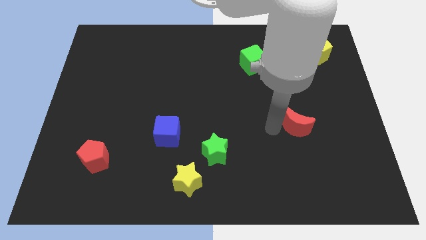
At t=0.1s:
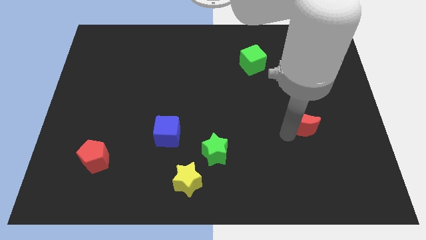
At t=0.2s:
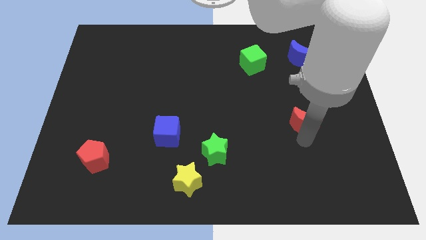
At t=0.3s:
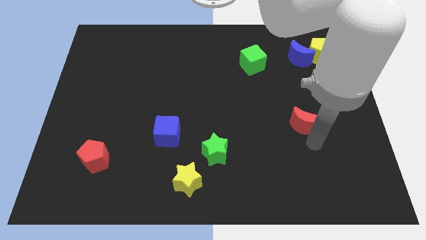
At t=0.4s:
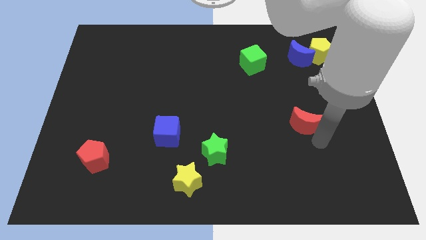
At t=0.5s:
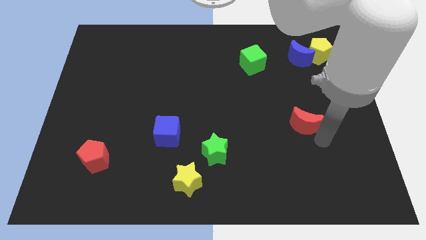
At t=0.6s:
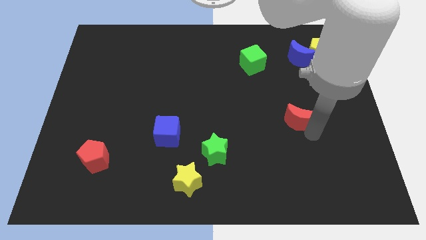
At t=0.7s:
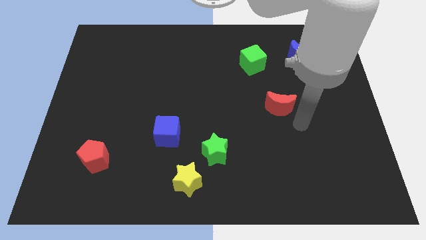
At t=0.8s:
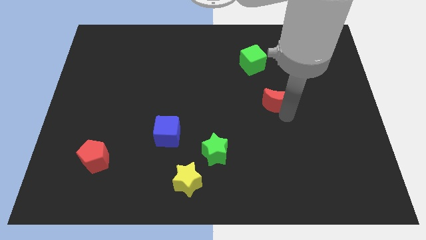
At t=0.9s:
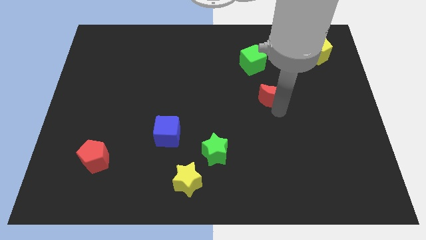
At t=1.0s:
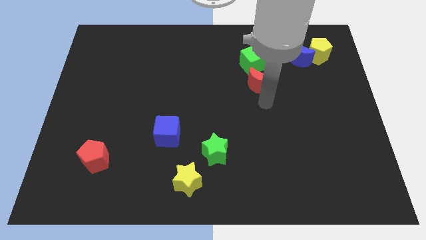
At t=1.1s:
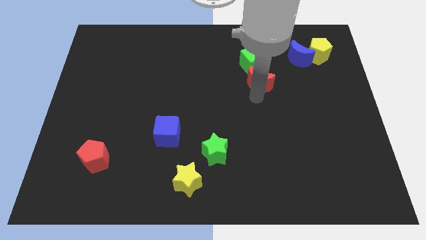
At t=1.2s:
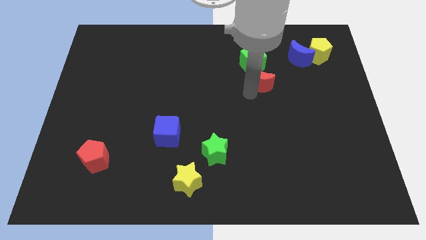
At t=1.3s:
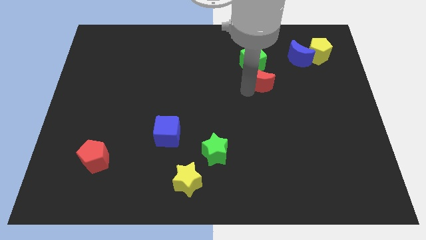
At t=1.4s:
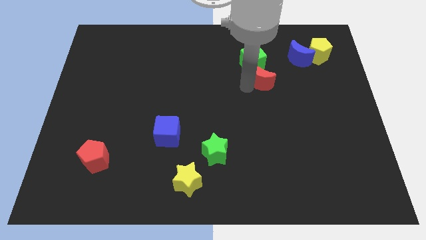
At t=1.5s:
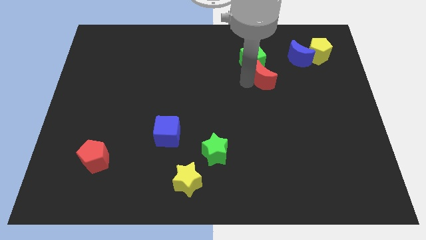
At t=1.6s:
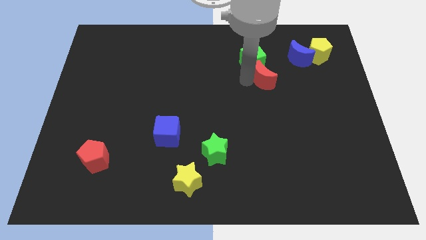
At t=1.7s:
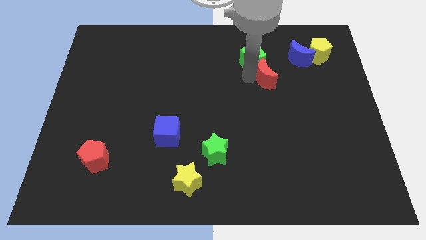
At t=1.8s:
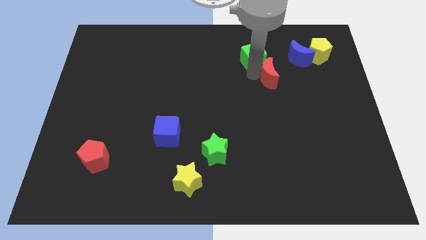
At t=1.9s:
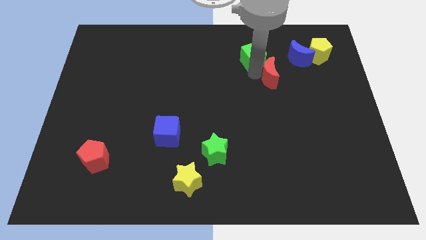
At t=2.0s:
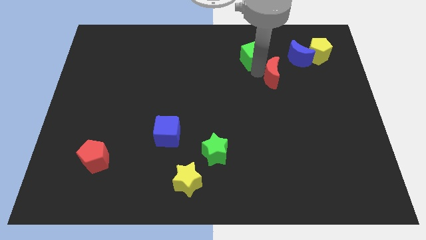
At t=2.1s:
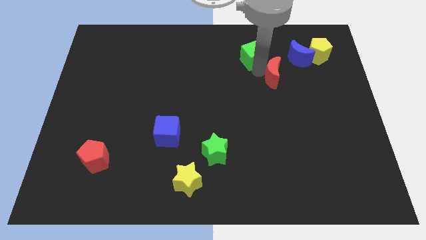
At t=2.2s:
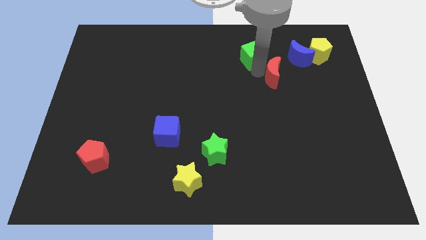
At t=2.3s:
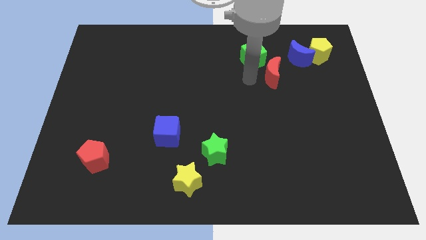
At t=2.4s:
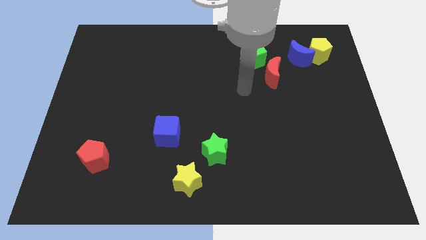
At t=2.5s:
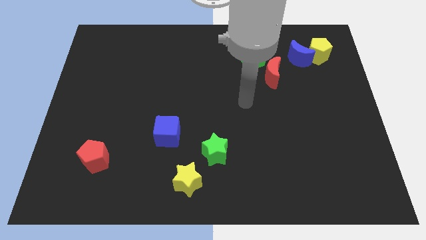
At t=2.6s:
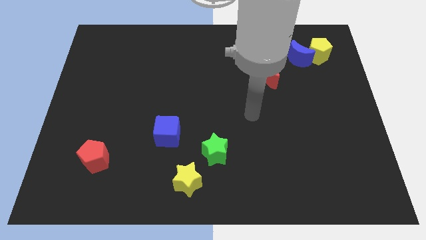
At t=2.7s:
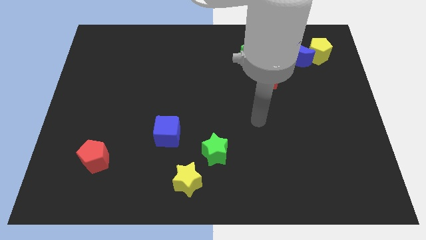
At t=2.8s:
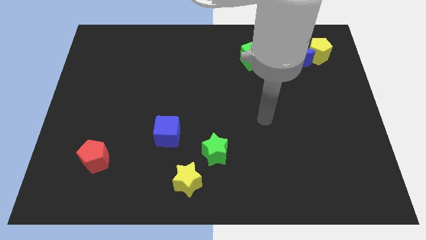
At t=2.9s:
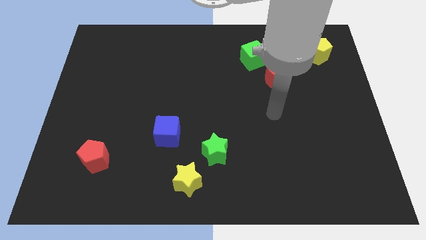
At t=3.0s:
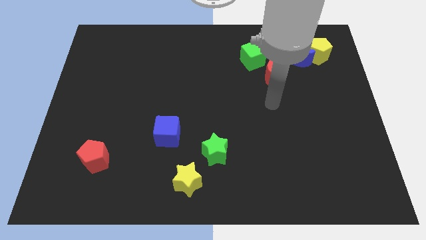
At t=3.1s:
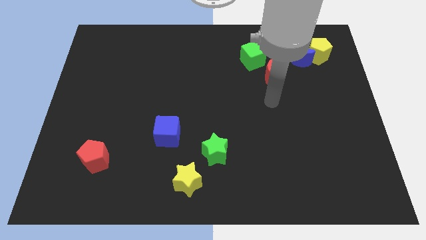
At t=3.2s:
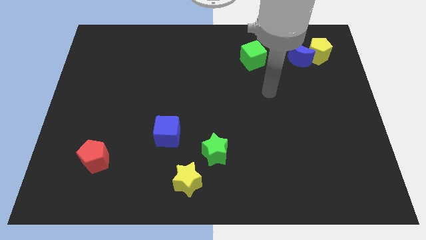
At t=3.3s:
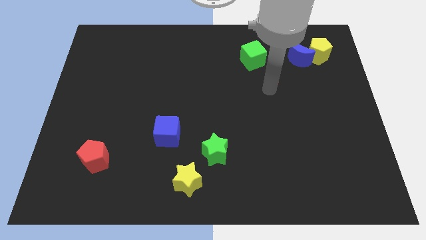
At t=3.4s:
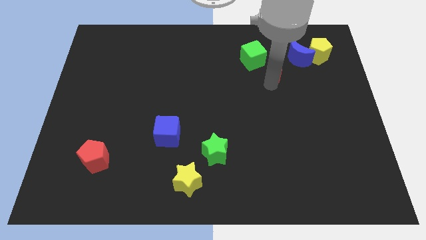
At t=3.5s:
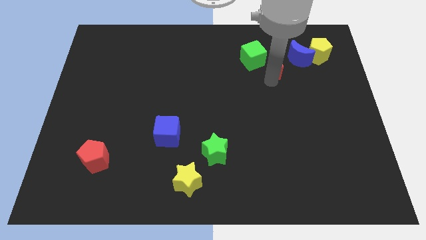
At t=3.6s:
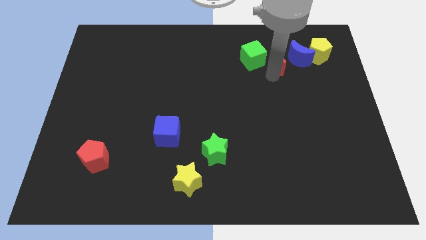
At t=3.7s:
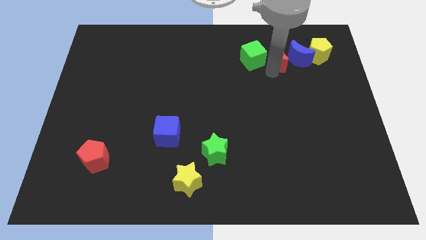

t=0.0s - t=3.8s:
place the red moon bottom right diagonally to the green cube

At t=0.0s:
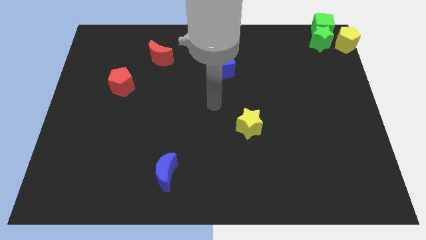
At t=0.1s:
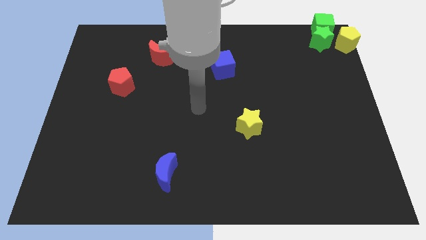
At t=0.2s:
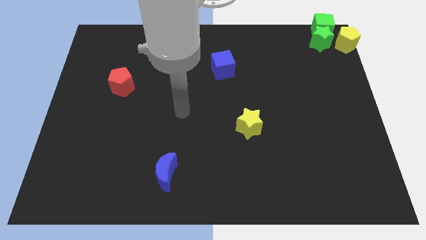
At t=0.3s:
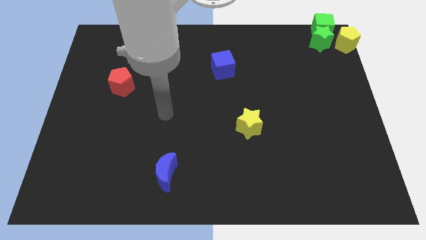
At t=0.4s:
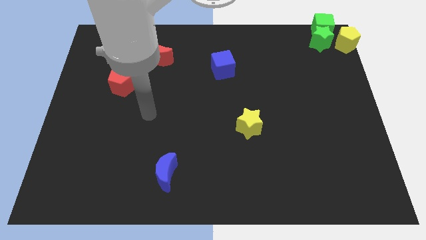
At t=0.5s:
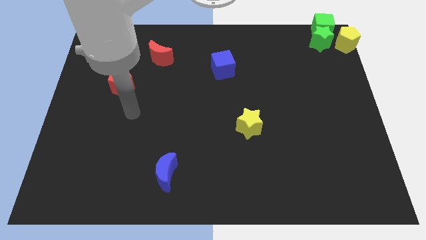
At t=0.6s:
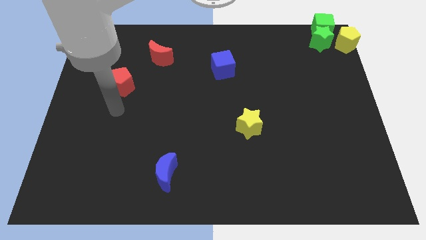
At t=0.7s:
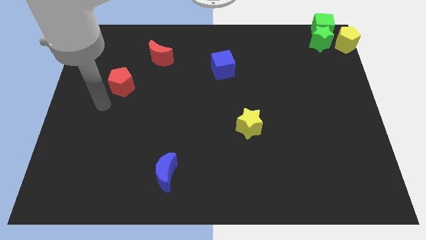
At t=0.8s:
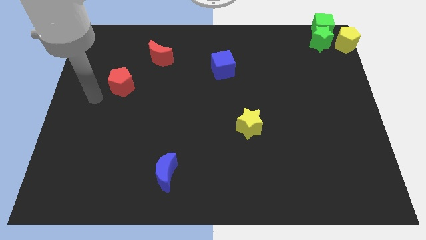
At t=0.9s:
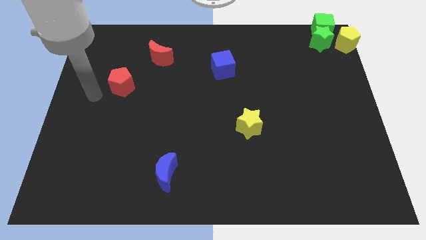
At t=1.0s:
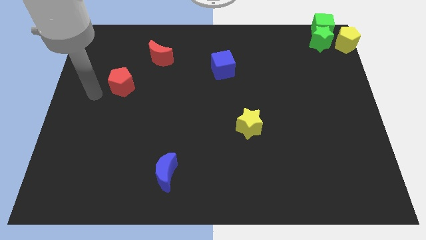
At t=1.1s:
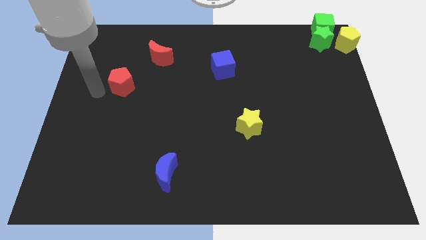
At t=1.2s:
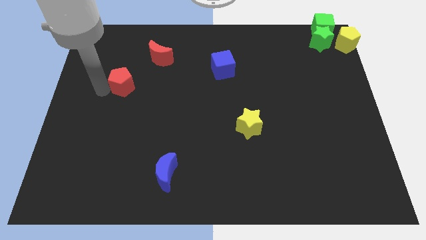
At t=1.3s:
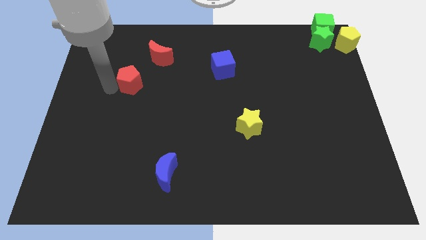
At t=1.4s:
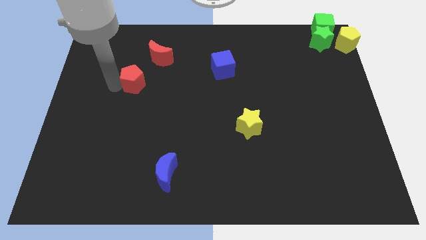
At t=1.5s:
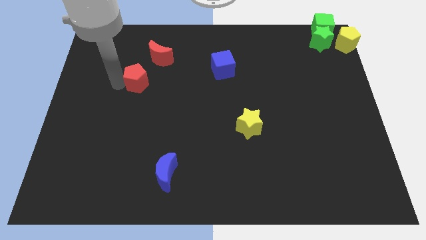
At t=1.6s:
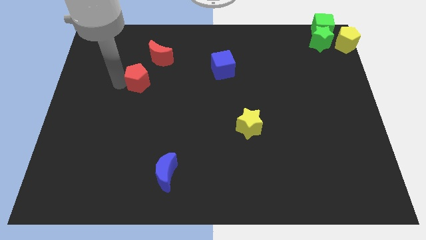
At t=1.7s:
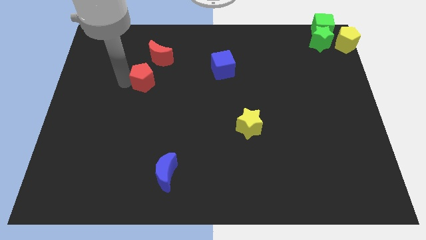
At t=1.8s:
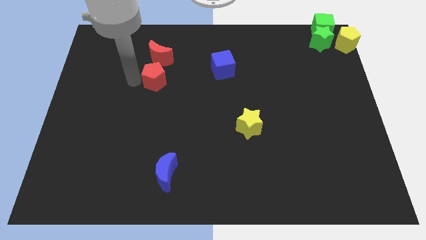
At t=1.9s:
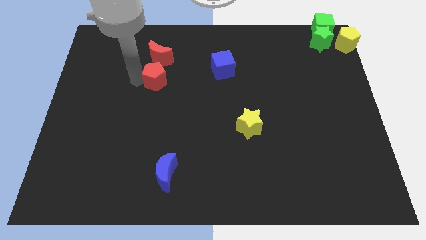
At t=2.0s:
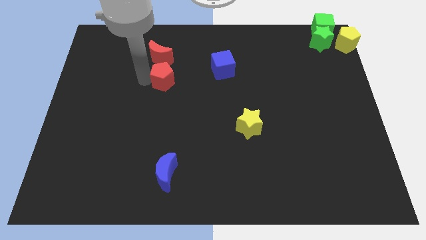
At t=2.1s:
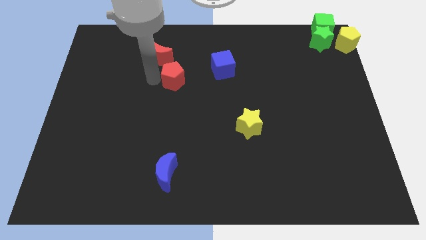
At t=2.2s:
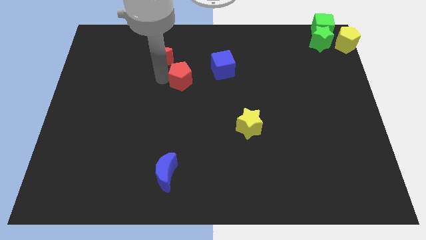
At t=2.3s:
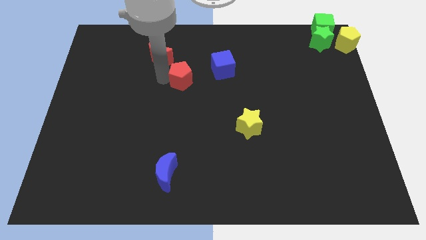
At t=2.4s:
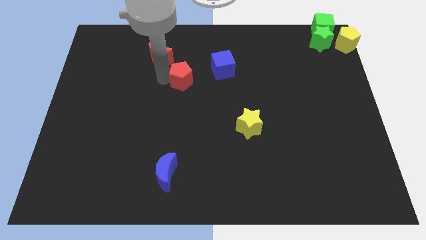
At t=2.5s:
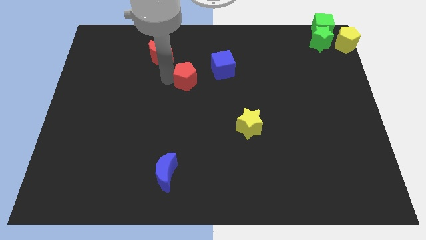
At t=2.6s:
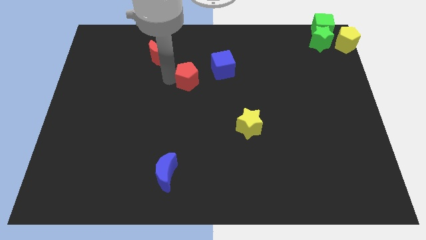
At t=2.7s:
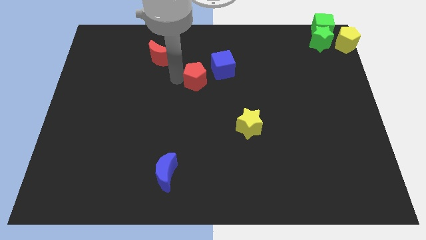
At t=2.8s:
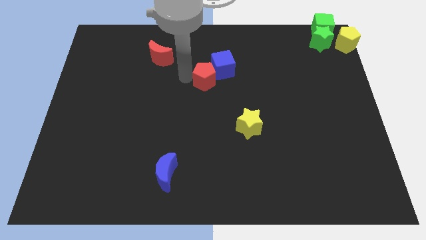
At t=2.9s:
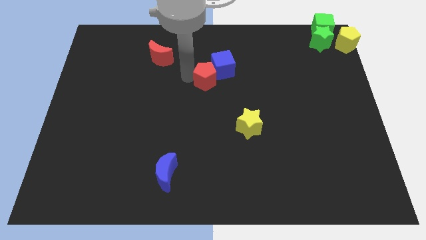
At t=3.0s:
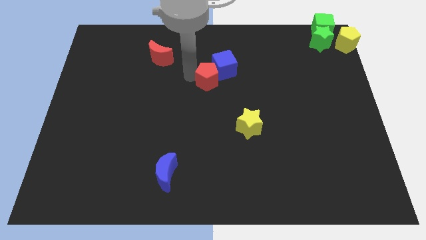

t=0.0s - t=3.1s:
push the red pentagon to the left of the blue cube

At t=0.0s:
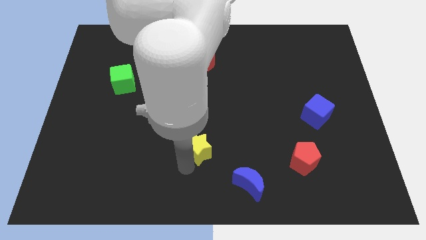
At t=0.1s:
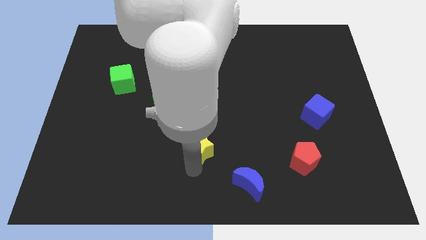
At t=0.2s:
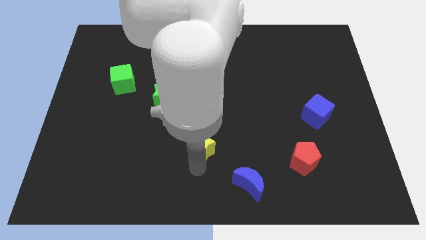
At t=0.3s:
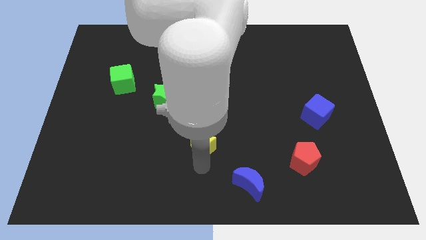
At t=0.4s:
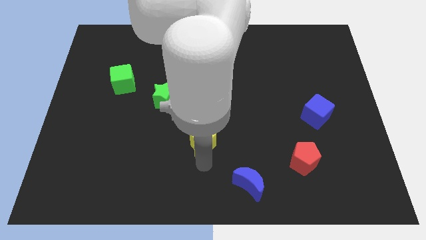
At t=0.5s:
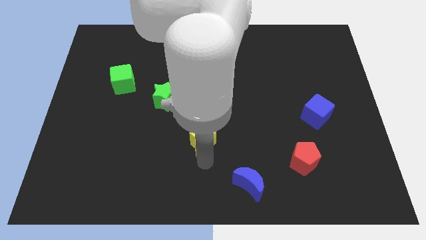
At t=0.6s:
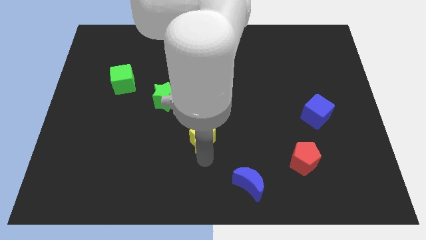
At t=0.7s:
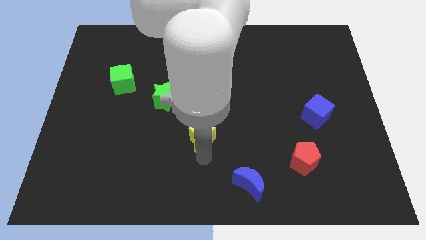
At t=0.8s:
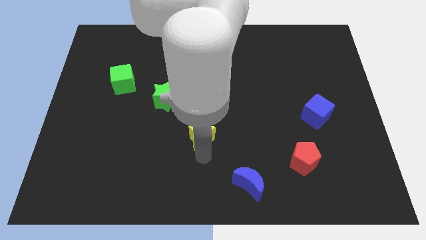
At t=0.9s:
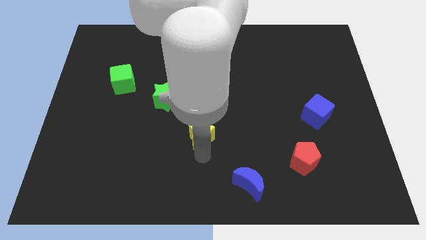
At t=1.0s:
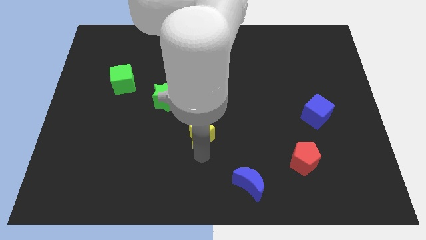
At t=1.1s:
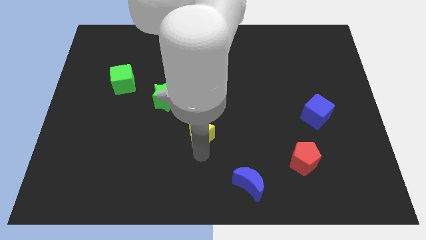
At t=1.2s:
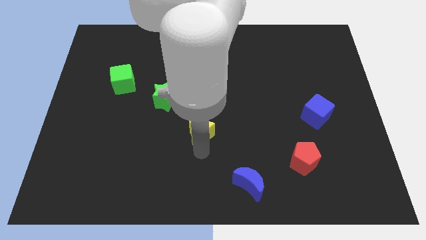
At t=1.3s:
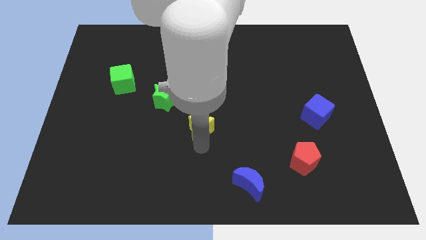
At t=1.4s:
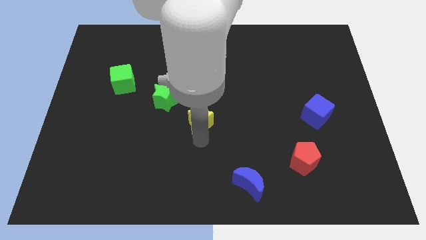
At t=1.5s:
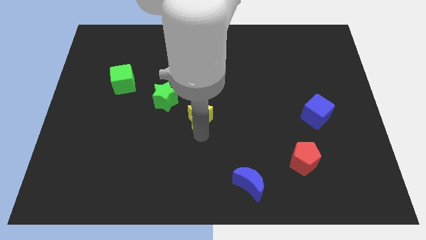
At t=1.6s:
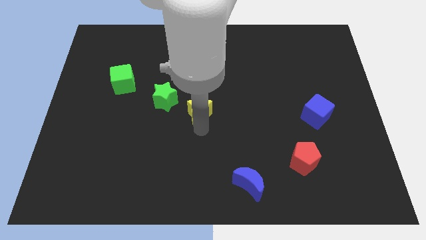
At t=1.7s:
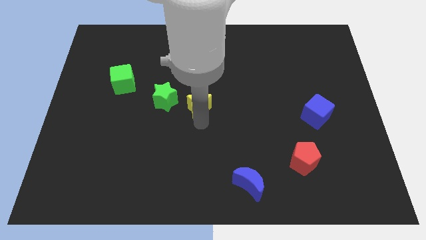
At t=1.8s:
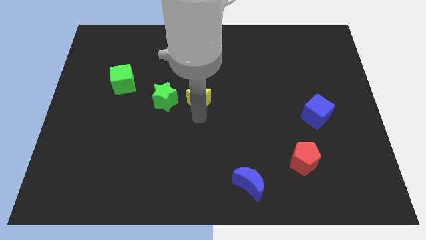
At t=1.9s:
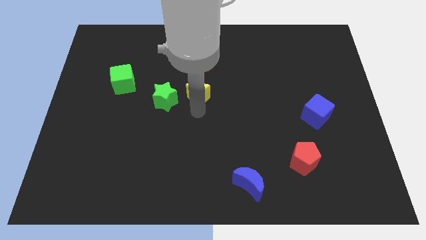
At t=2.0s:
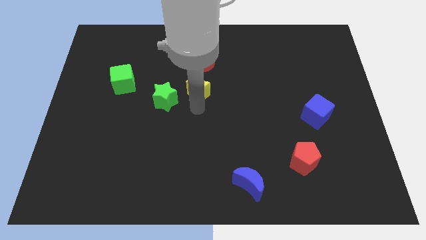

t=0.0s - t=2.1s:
slide the yellow star vertically below the red crescent
